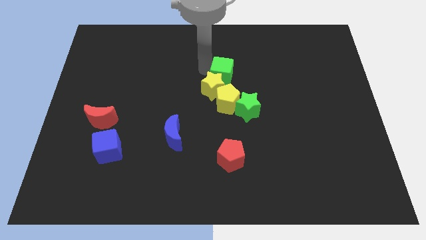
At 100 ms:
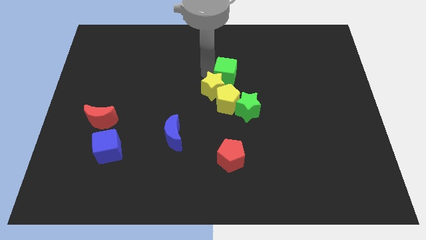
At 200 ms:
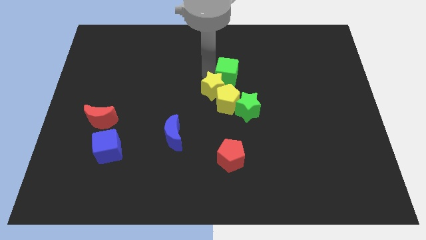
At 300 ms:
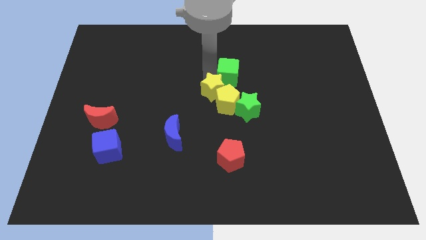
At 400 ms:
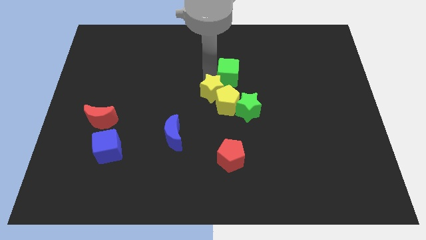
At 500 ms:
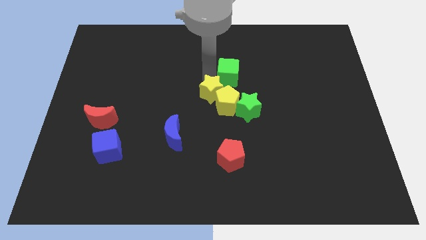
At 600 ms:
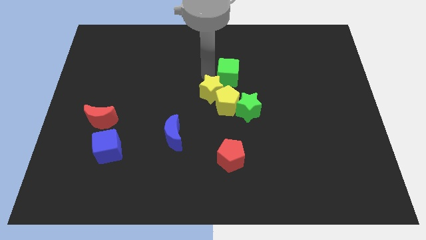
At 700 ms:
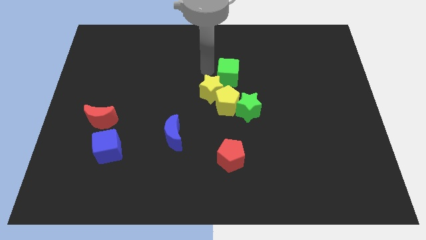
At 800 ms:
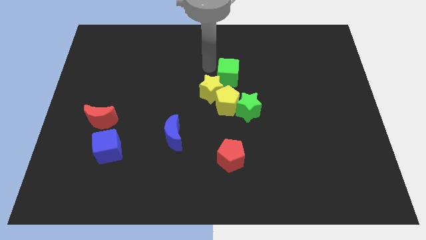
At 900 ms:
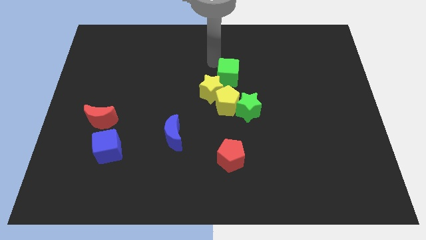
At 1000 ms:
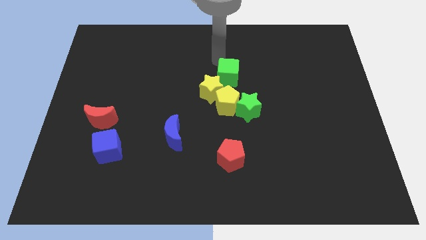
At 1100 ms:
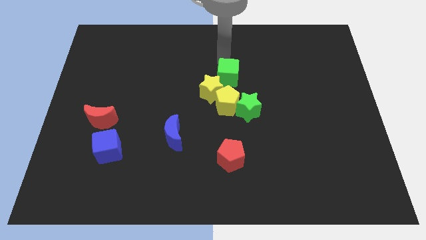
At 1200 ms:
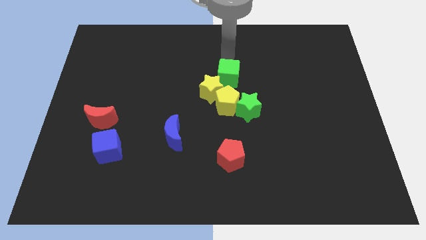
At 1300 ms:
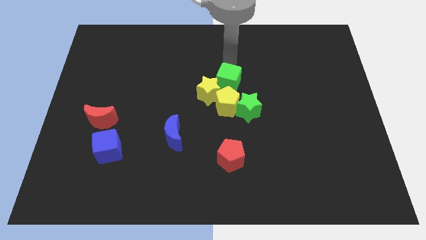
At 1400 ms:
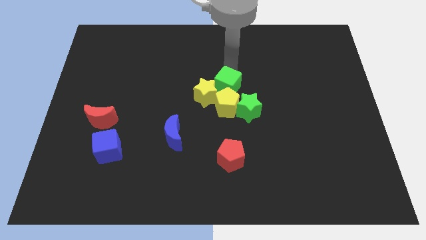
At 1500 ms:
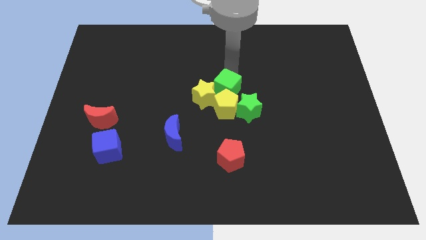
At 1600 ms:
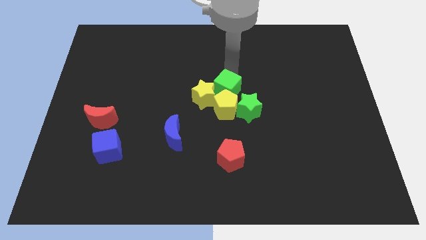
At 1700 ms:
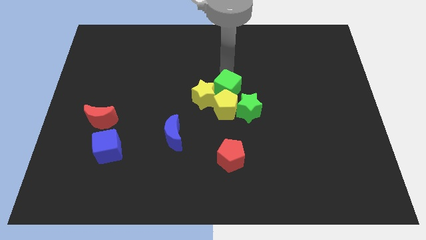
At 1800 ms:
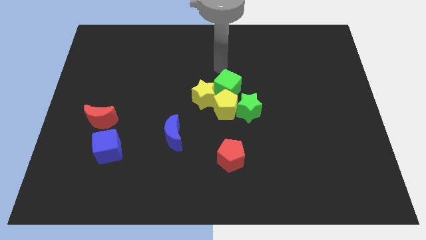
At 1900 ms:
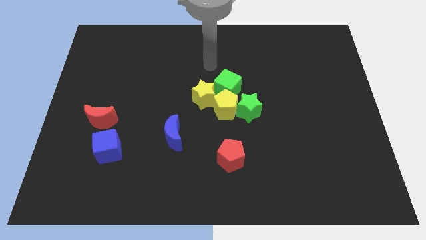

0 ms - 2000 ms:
place the green cube into yellow blocks on top

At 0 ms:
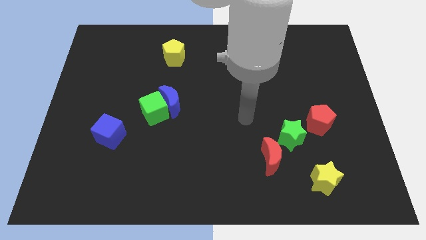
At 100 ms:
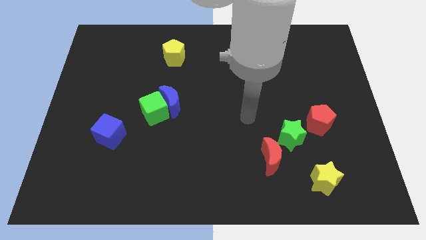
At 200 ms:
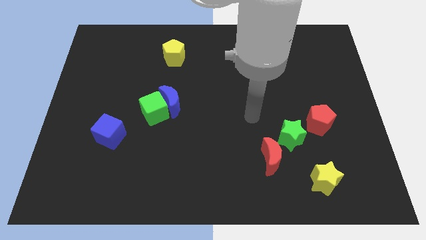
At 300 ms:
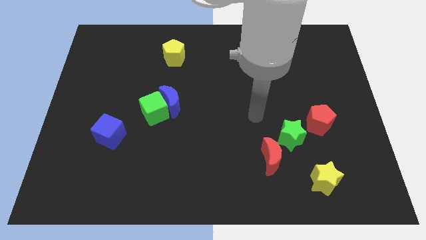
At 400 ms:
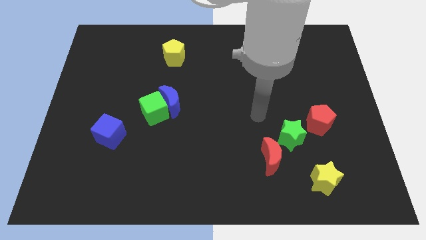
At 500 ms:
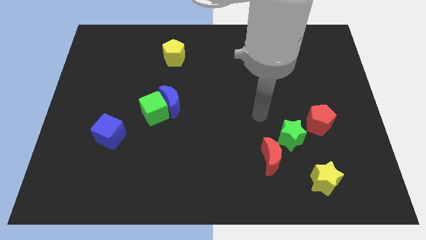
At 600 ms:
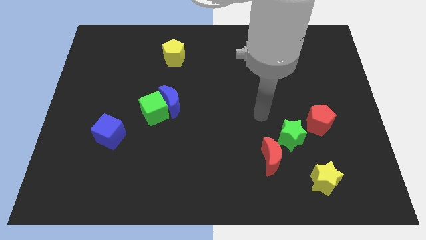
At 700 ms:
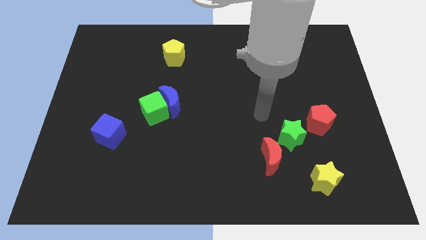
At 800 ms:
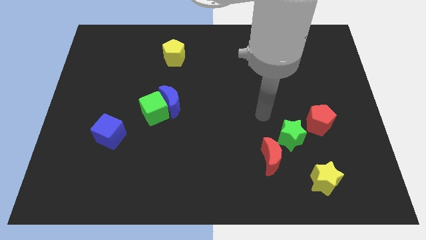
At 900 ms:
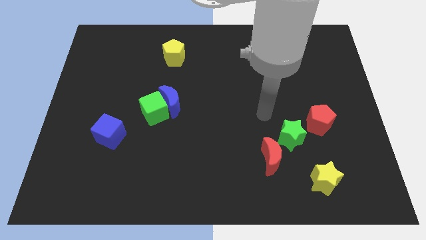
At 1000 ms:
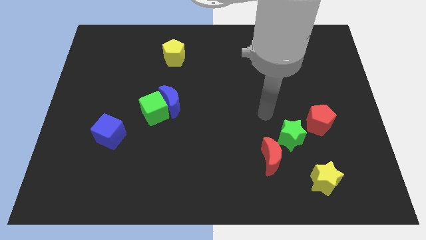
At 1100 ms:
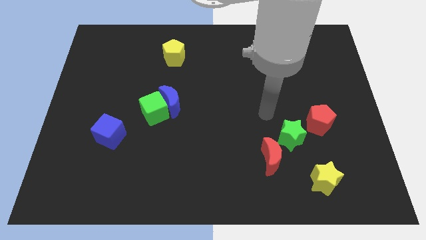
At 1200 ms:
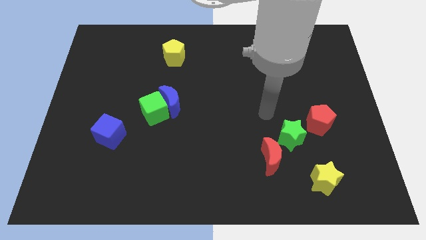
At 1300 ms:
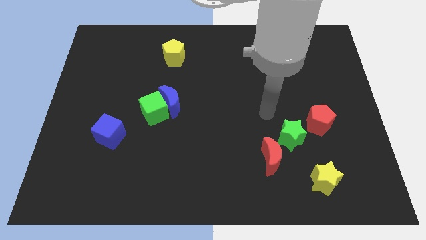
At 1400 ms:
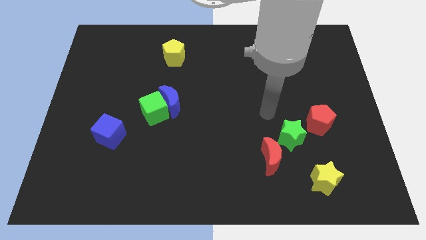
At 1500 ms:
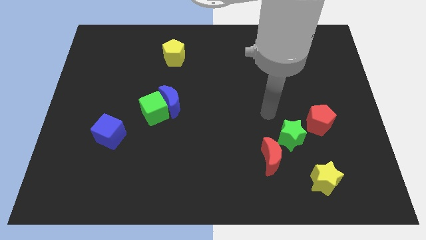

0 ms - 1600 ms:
go slightly to the right

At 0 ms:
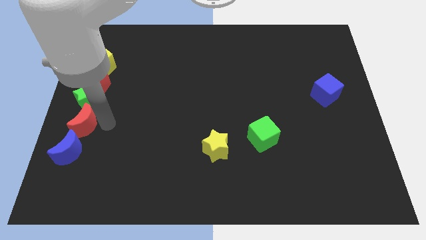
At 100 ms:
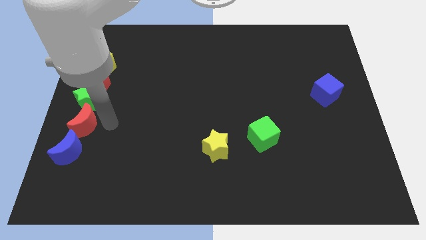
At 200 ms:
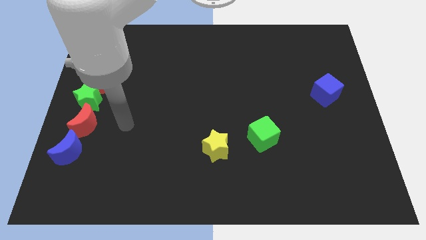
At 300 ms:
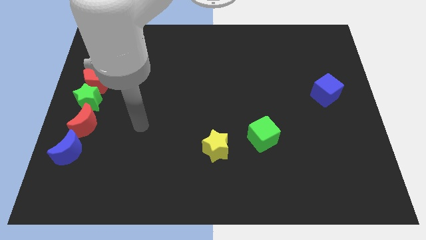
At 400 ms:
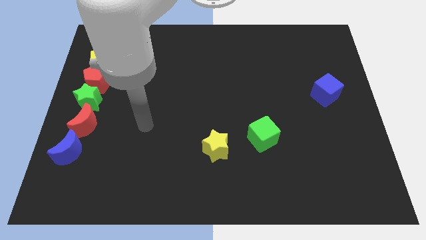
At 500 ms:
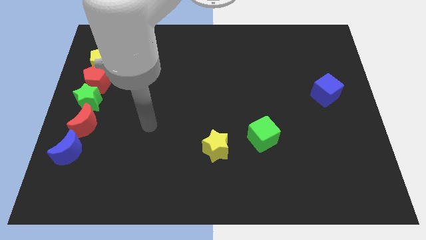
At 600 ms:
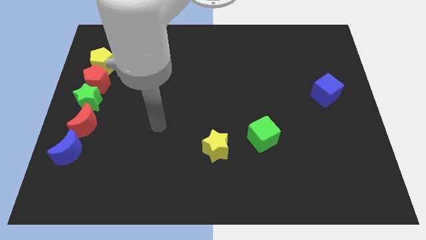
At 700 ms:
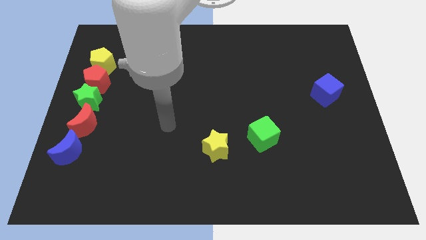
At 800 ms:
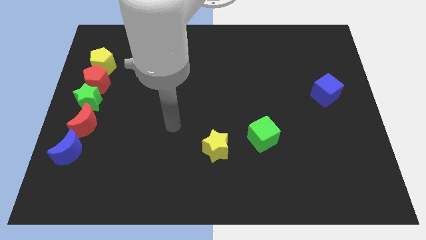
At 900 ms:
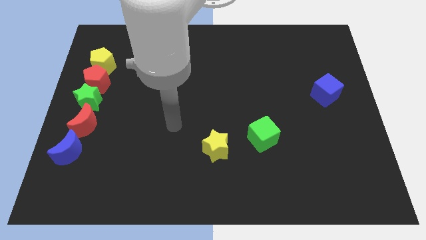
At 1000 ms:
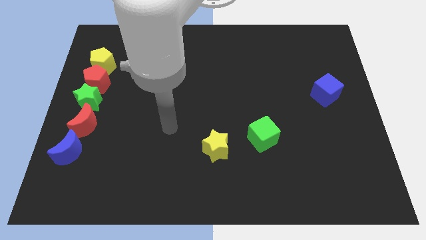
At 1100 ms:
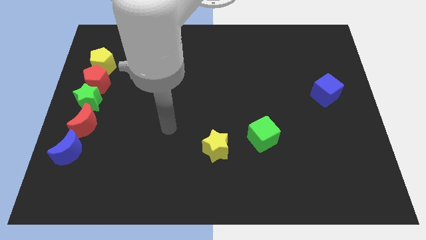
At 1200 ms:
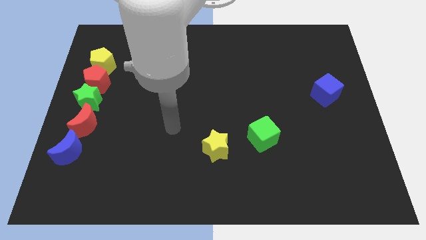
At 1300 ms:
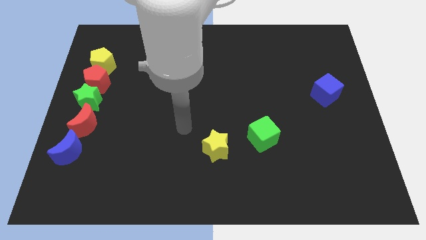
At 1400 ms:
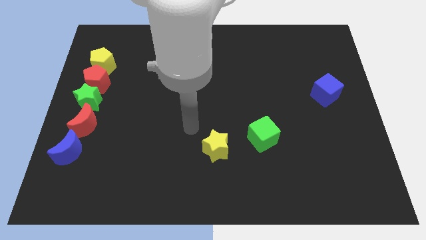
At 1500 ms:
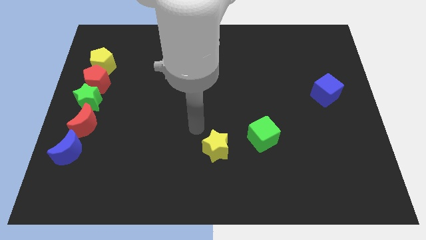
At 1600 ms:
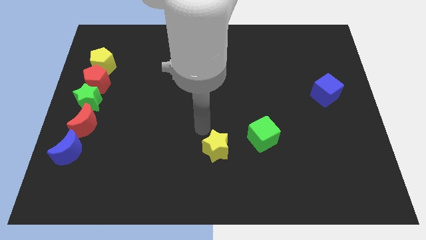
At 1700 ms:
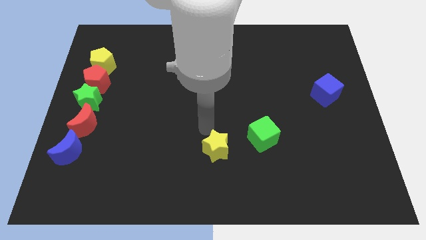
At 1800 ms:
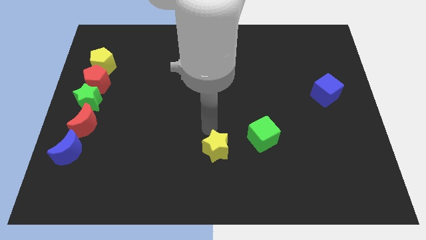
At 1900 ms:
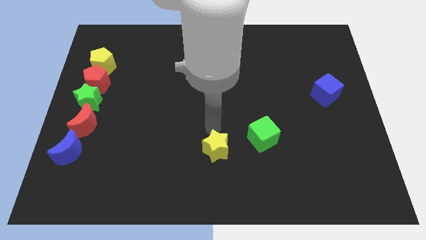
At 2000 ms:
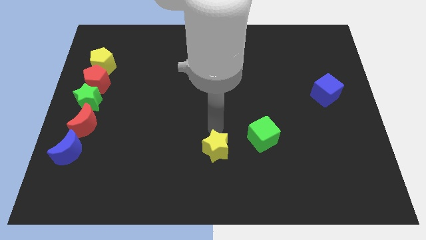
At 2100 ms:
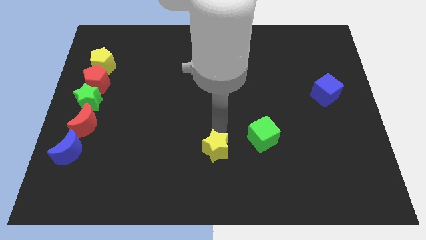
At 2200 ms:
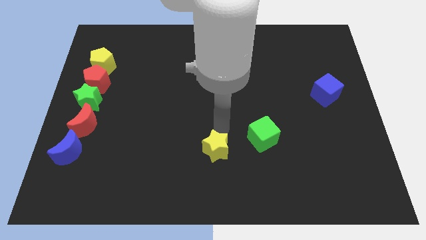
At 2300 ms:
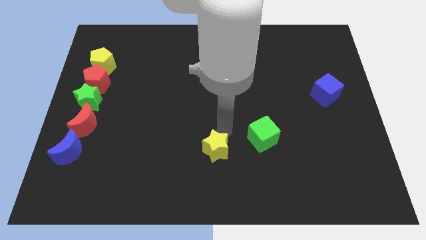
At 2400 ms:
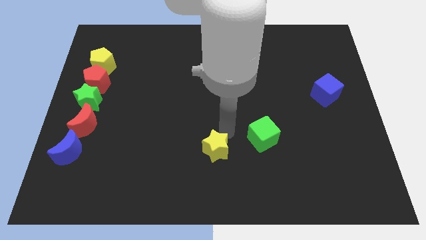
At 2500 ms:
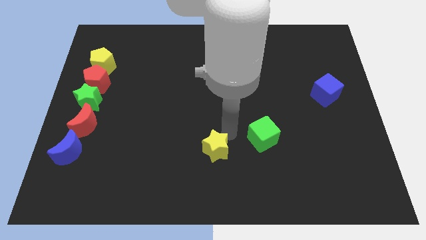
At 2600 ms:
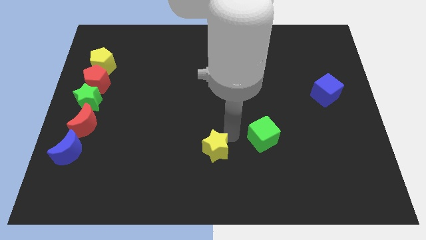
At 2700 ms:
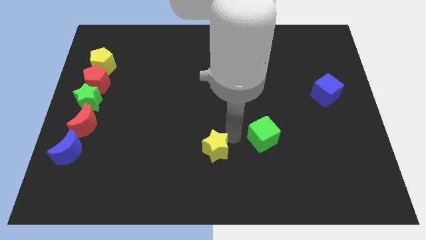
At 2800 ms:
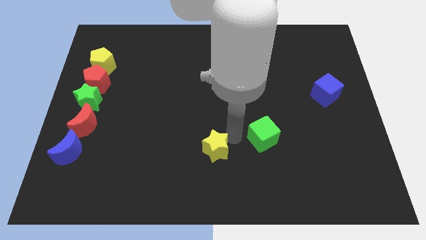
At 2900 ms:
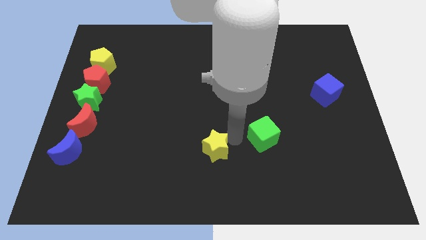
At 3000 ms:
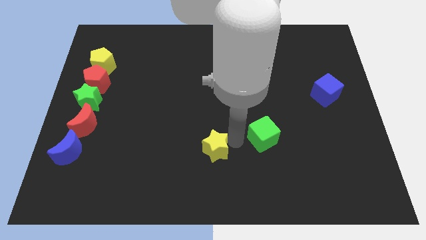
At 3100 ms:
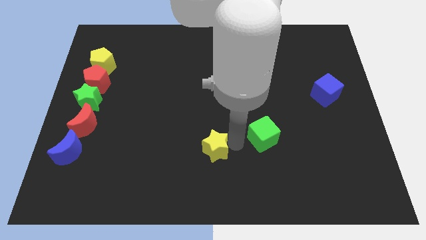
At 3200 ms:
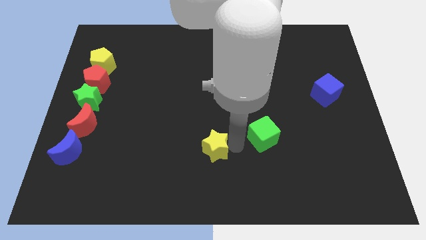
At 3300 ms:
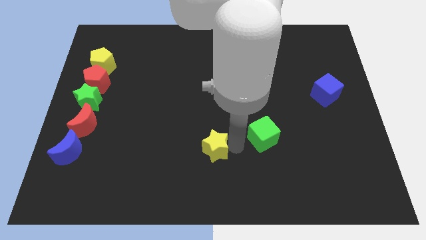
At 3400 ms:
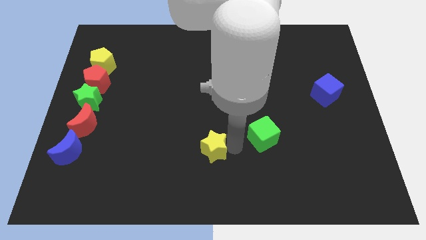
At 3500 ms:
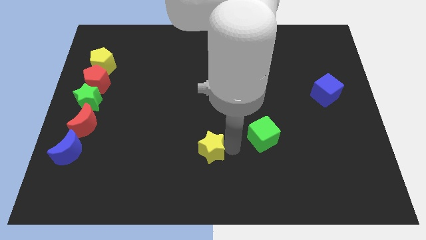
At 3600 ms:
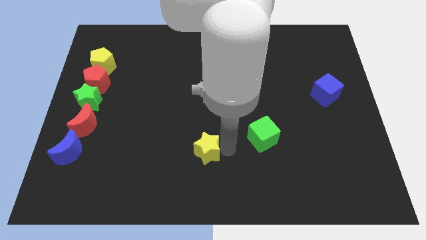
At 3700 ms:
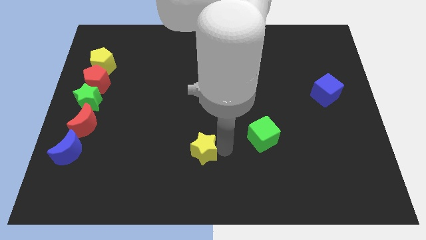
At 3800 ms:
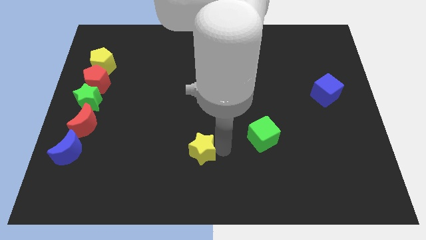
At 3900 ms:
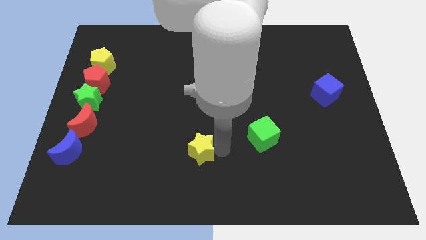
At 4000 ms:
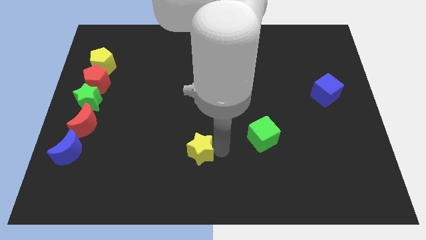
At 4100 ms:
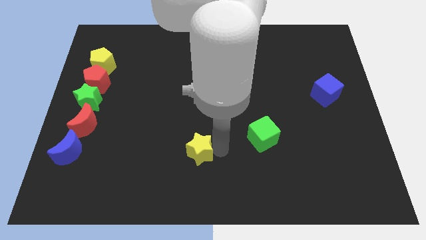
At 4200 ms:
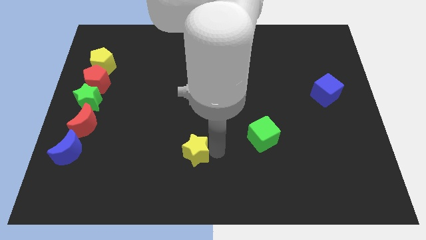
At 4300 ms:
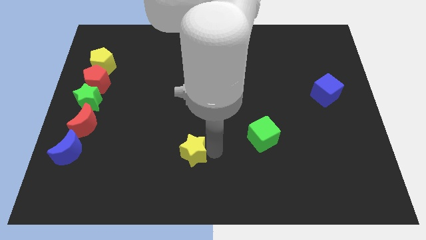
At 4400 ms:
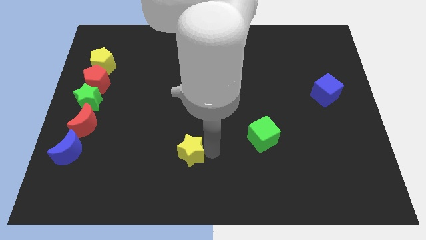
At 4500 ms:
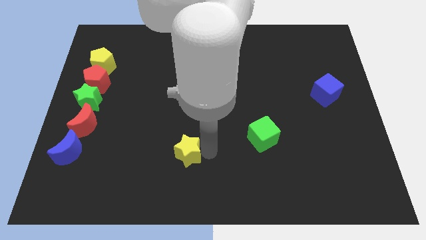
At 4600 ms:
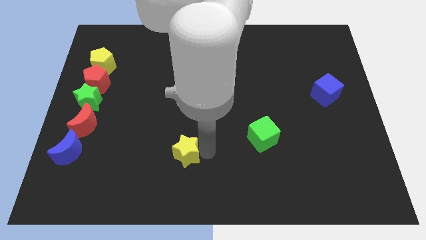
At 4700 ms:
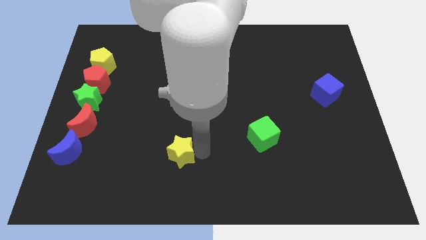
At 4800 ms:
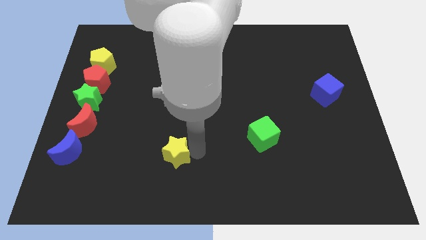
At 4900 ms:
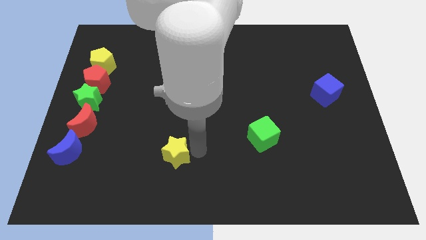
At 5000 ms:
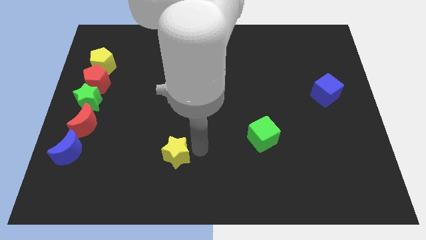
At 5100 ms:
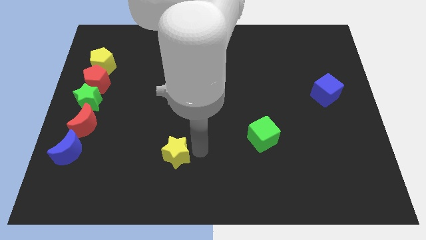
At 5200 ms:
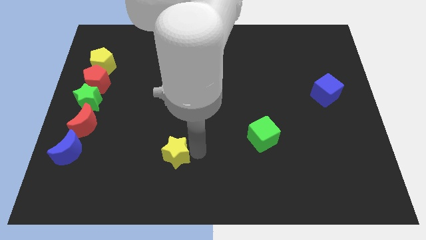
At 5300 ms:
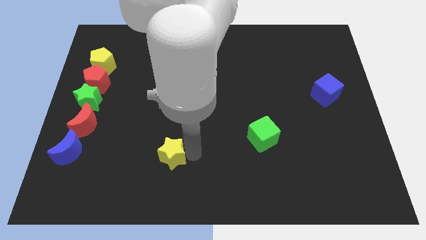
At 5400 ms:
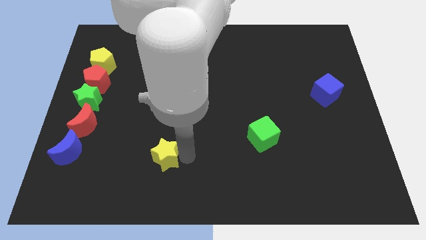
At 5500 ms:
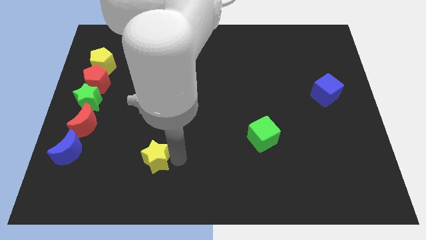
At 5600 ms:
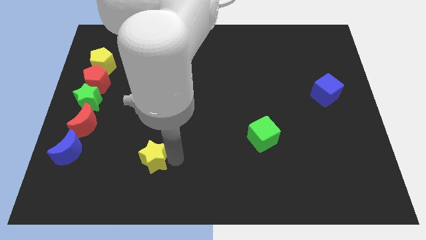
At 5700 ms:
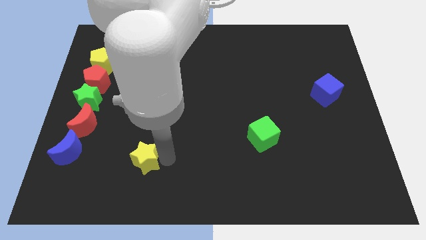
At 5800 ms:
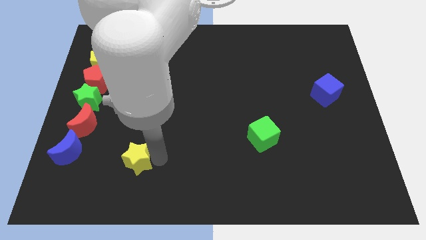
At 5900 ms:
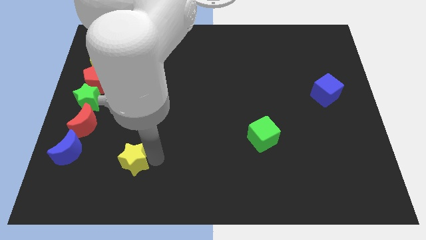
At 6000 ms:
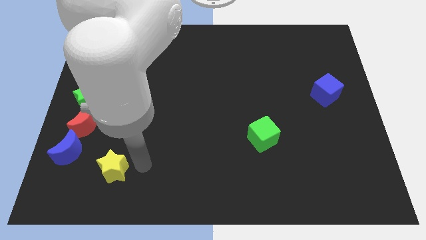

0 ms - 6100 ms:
push yellow star towards the blue moon
